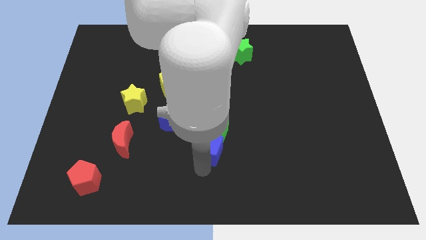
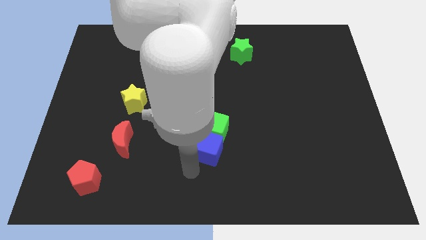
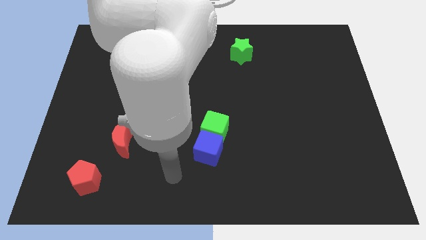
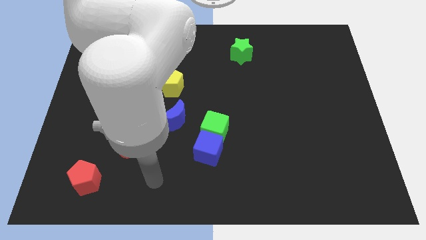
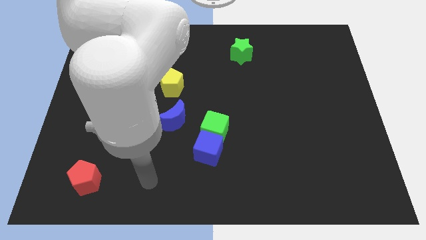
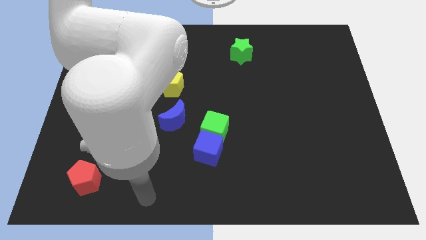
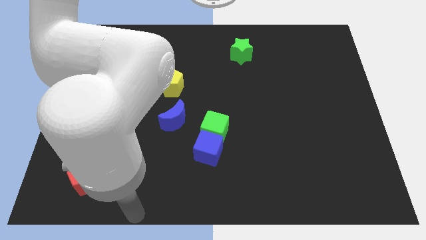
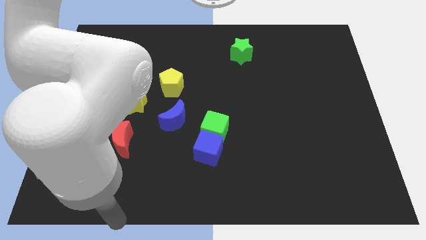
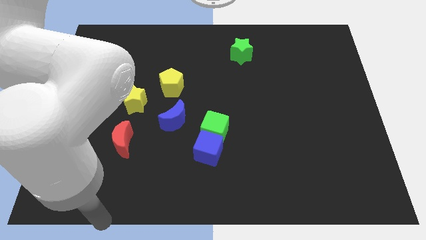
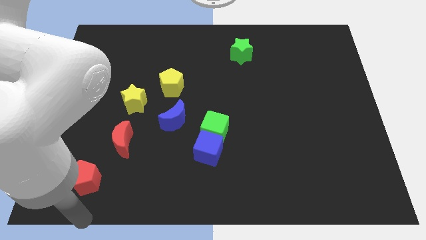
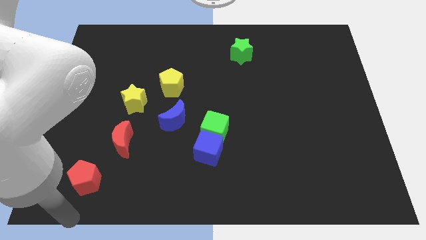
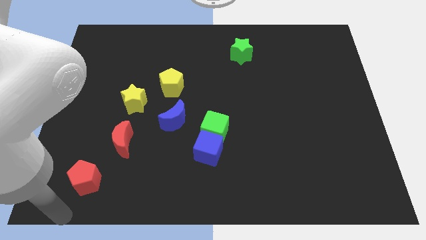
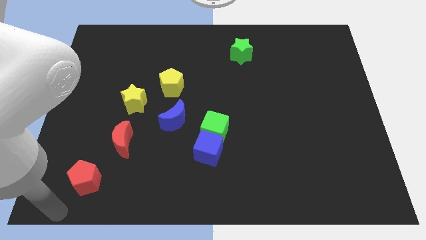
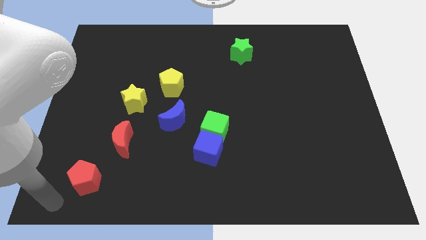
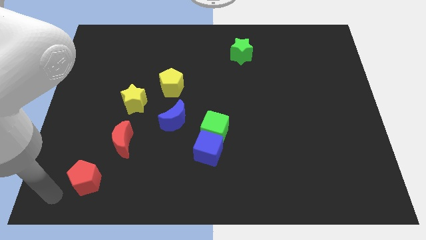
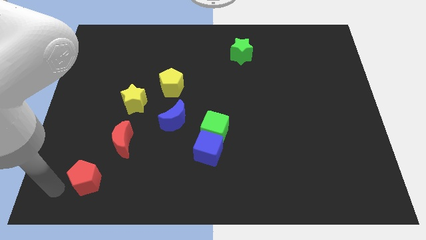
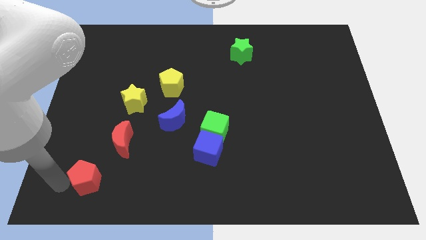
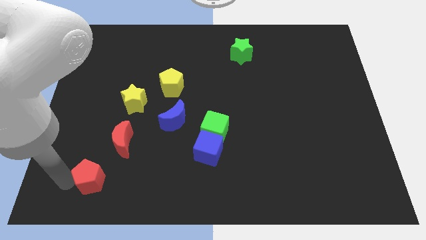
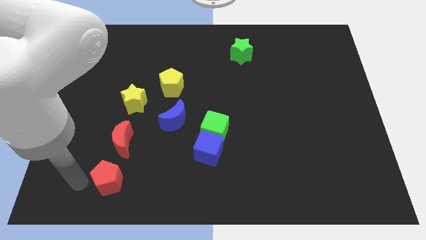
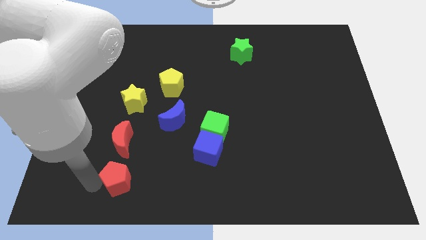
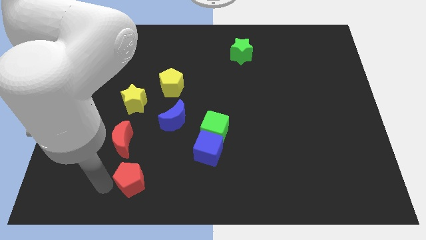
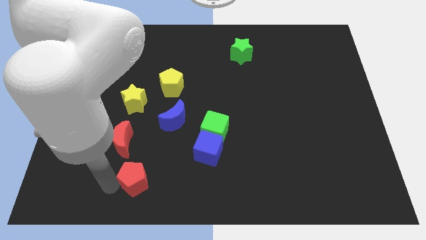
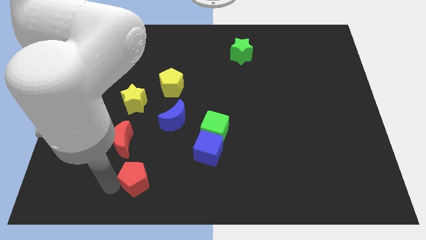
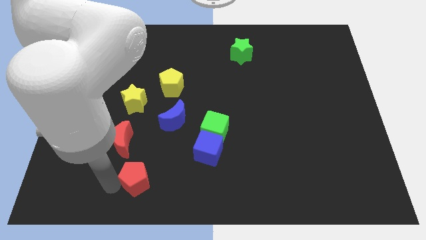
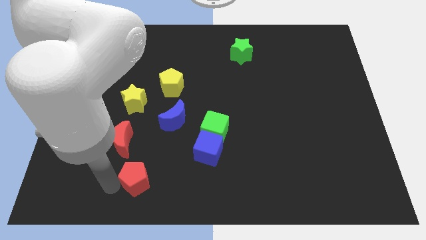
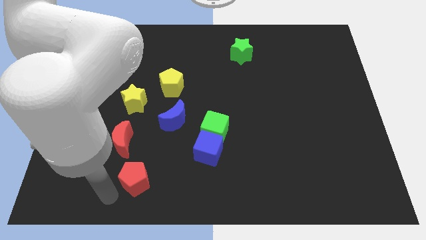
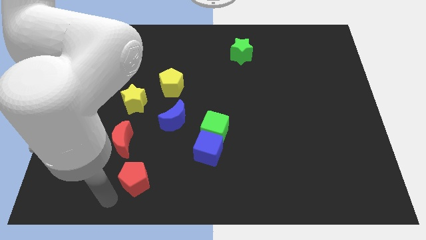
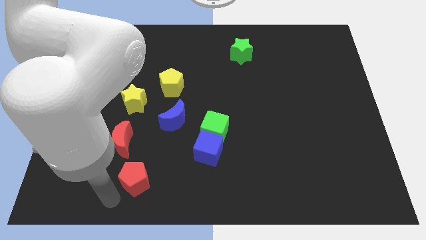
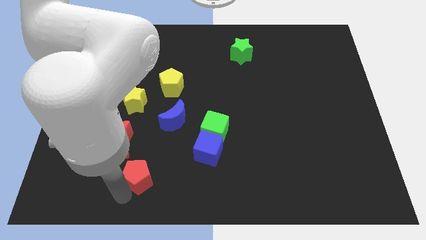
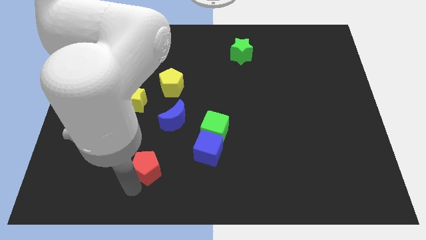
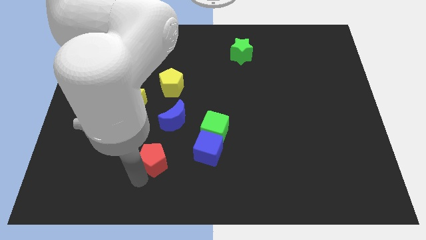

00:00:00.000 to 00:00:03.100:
slide the red pentagon to bottom left of blue moon

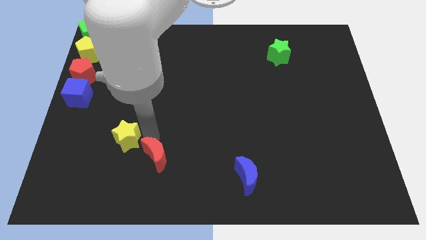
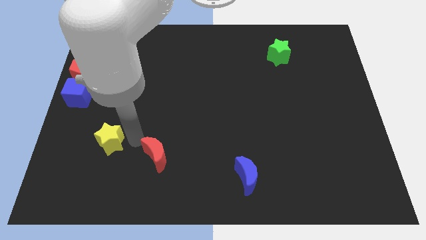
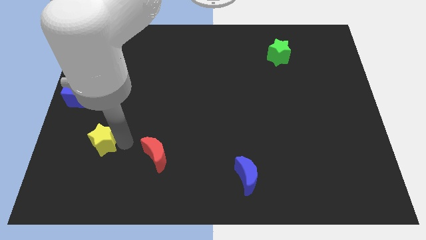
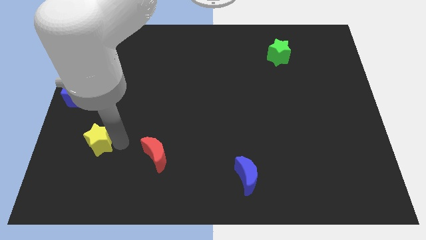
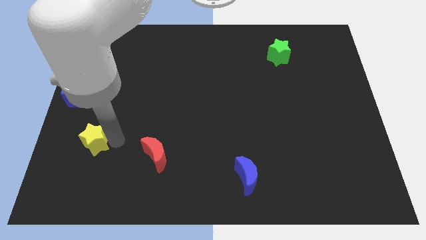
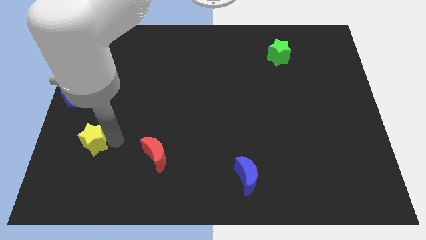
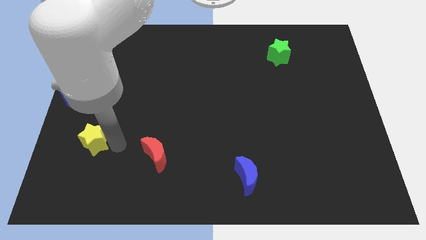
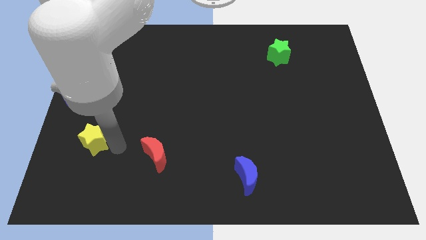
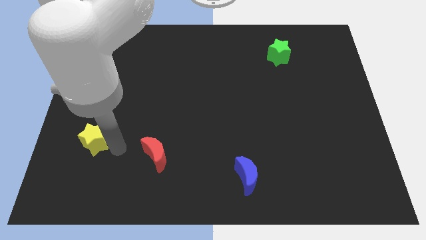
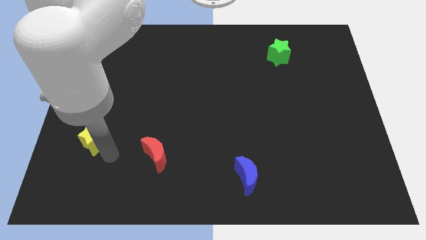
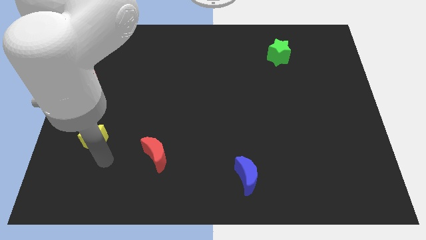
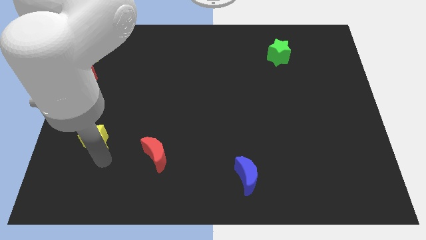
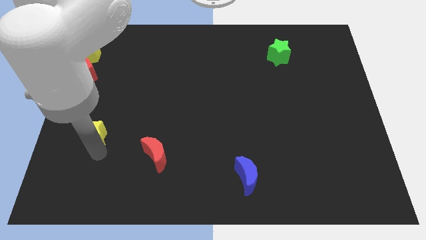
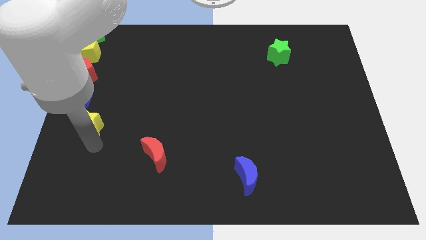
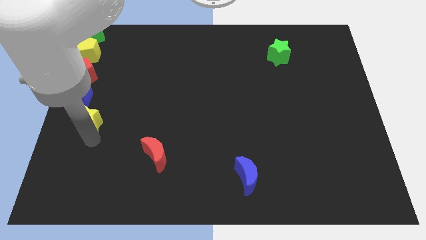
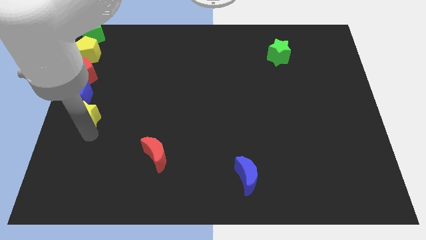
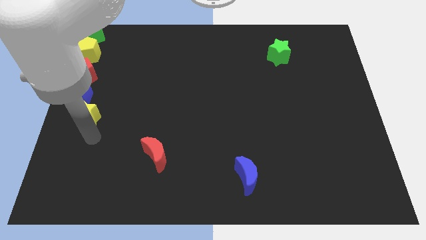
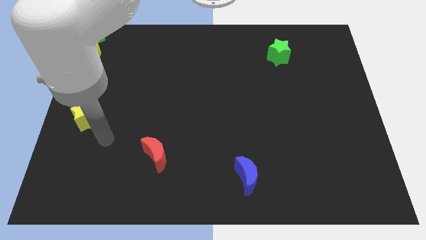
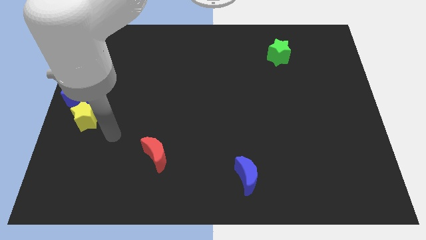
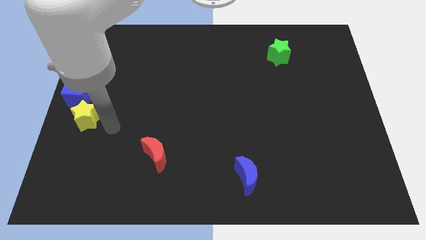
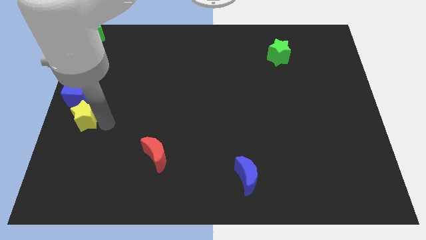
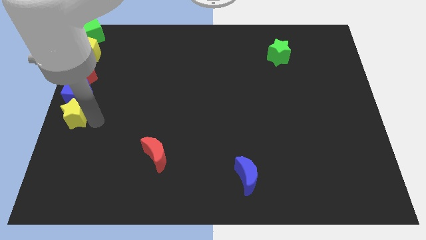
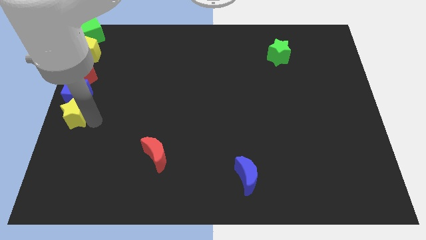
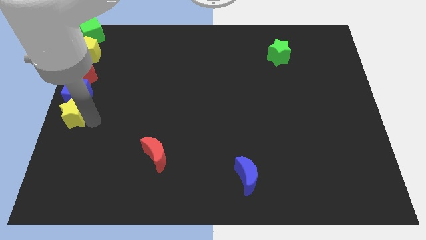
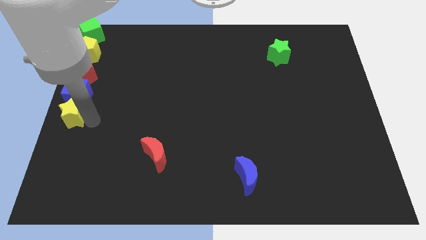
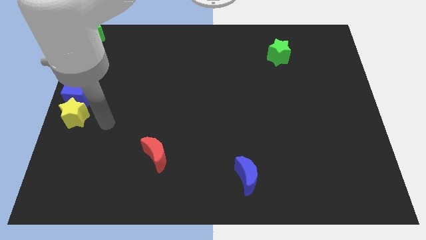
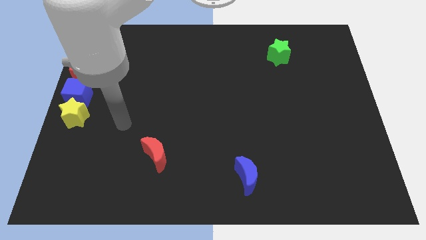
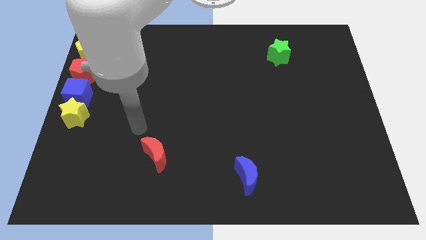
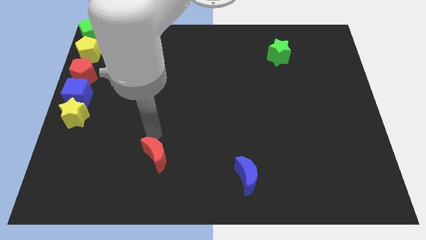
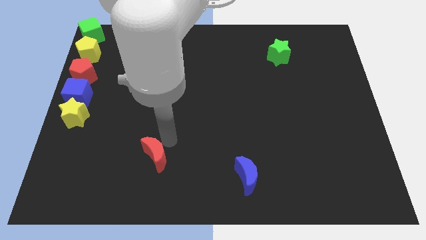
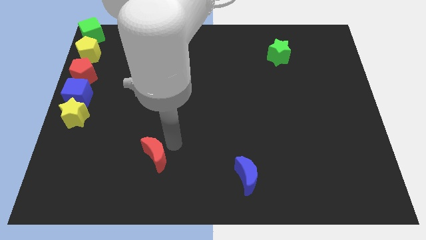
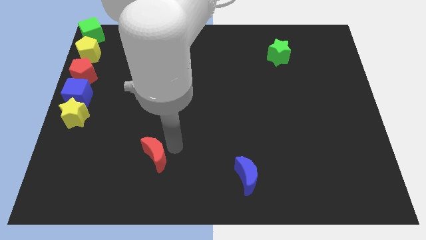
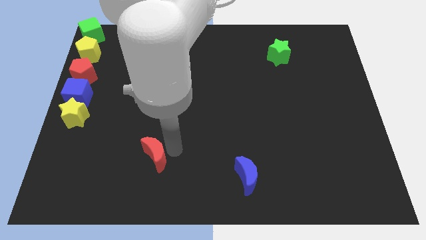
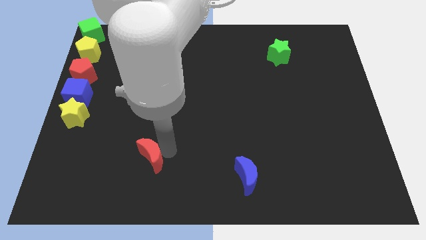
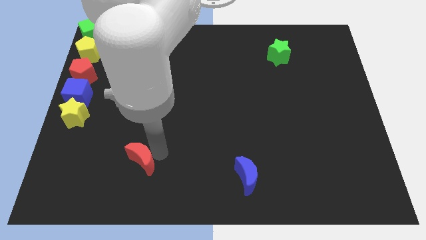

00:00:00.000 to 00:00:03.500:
move yellow star at the bottom of blue cube

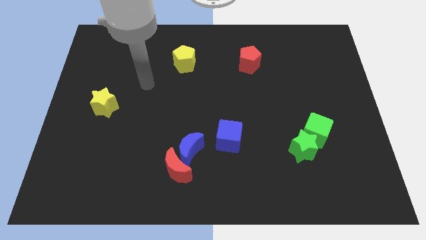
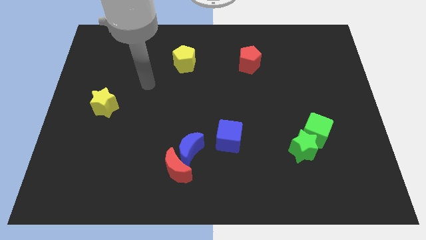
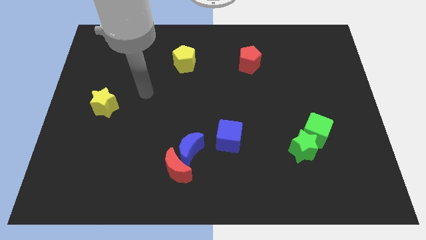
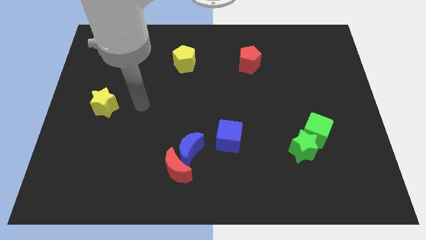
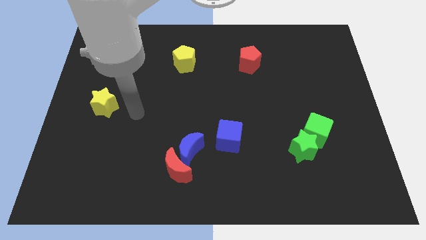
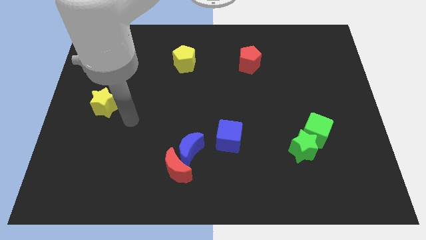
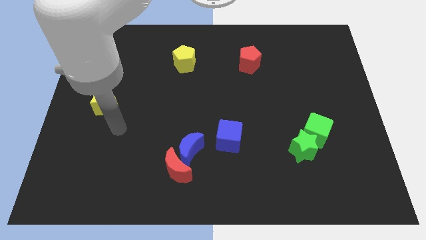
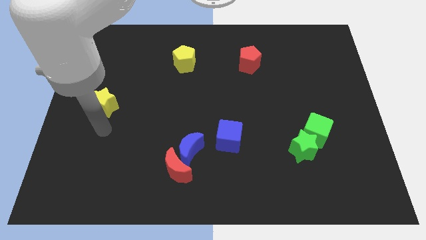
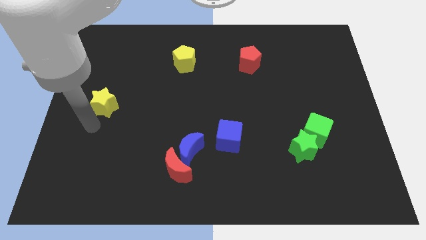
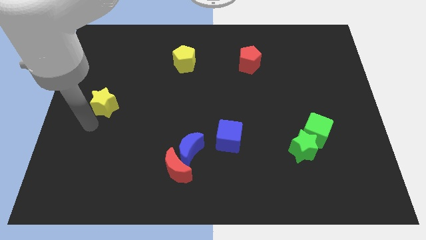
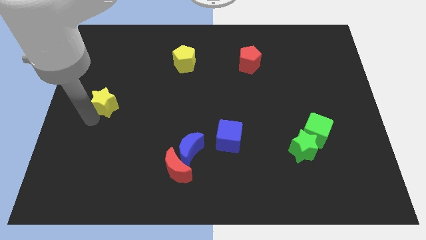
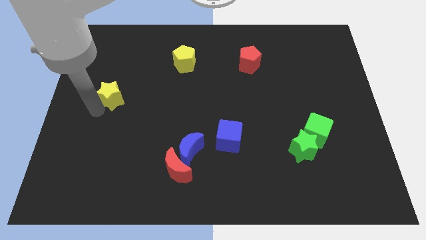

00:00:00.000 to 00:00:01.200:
slide the yellow star slightly to the top side of the board

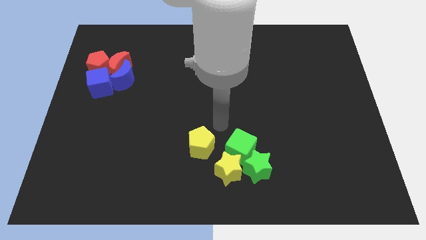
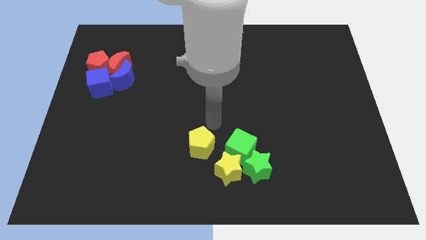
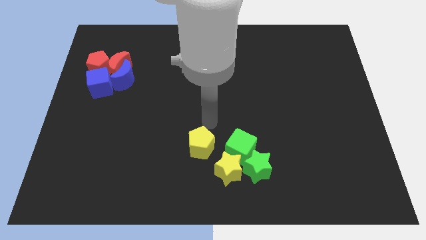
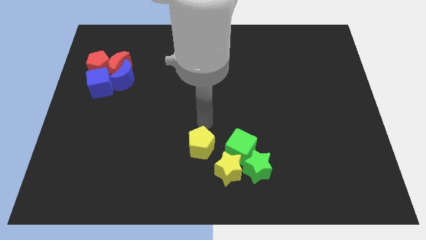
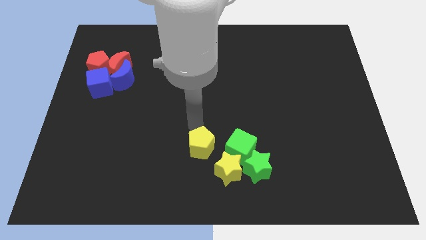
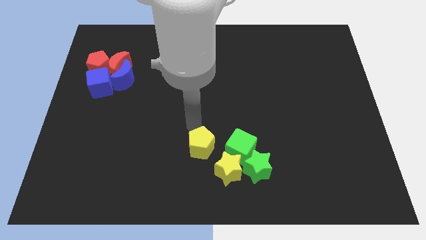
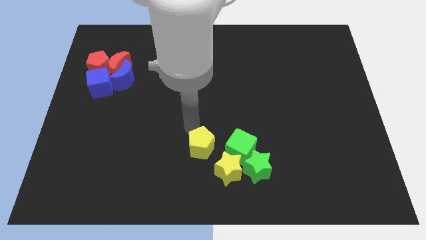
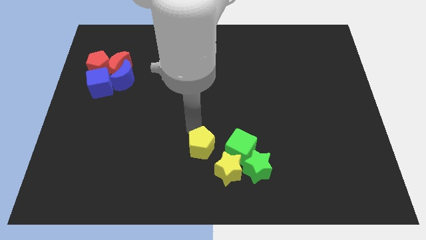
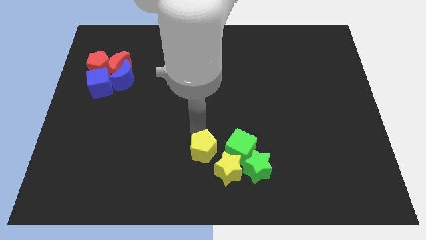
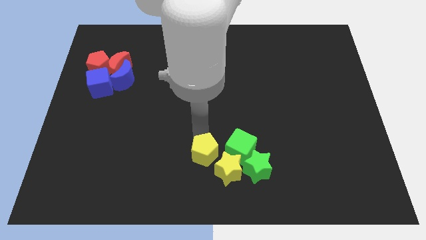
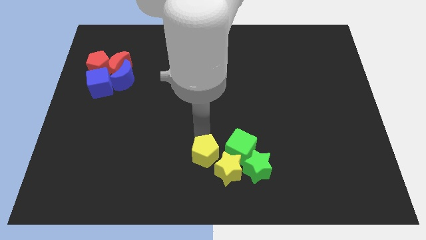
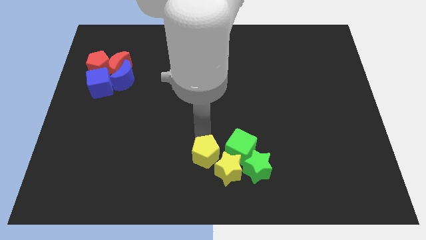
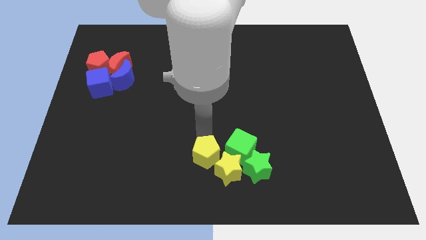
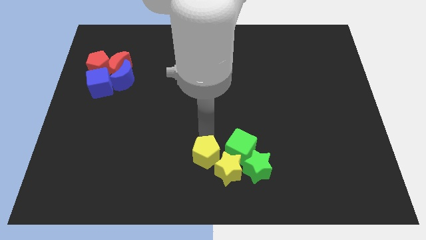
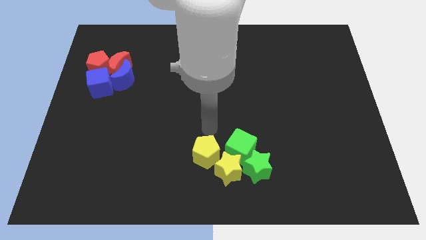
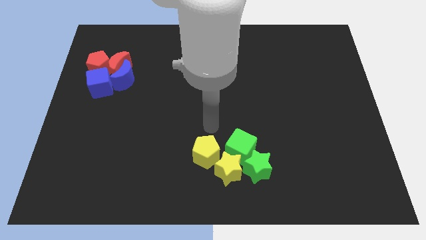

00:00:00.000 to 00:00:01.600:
push yellow pentagon towards yellow star
